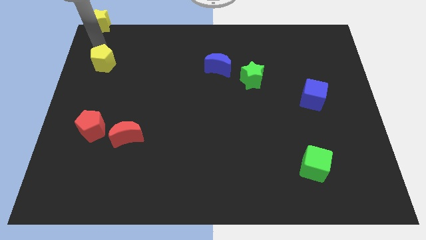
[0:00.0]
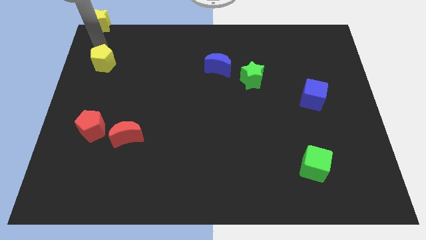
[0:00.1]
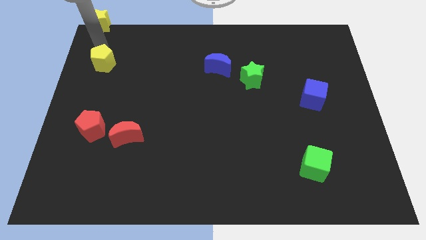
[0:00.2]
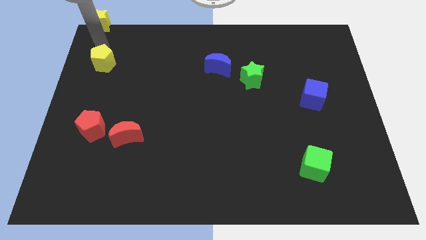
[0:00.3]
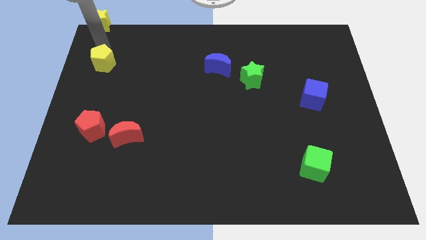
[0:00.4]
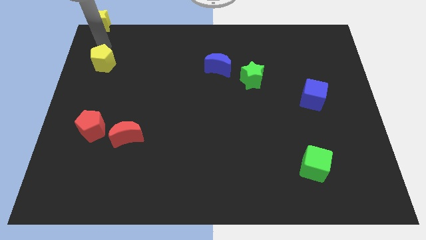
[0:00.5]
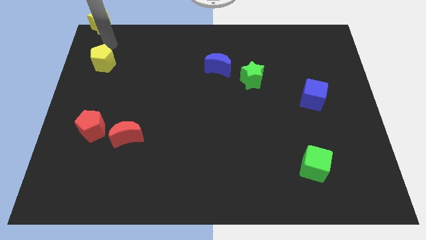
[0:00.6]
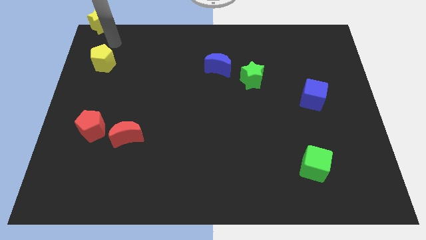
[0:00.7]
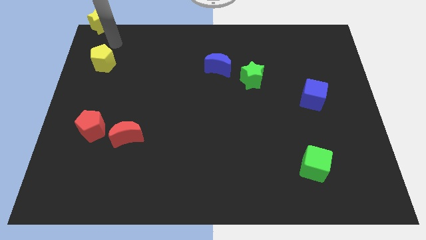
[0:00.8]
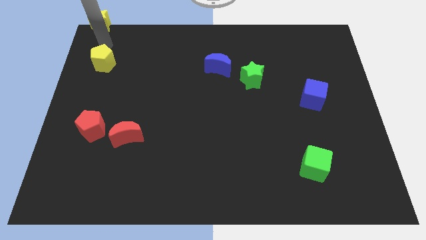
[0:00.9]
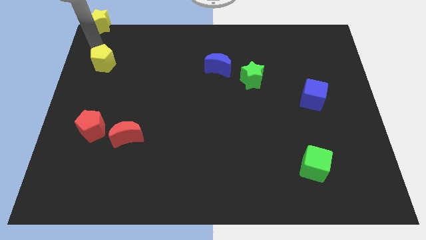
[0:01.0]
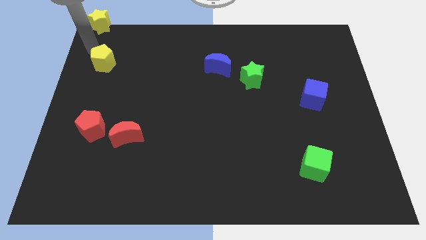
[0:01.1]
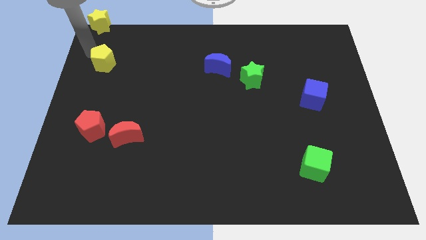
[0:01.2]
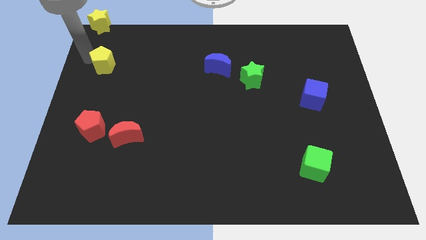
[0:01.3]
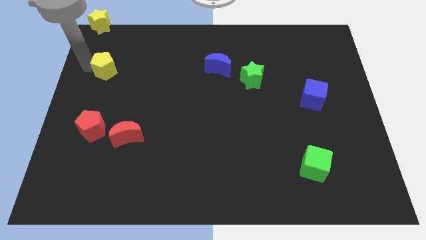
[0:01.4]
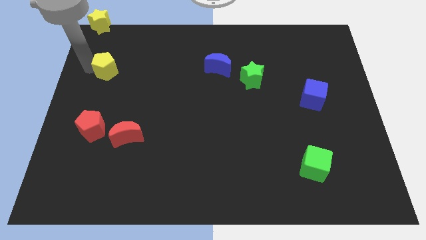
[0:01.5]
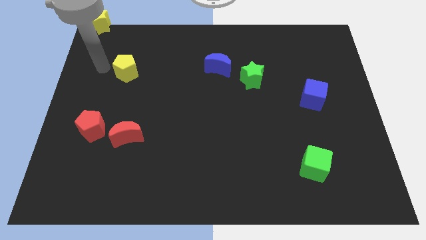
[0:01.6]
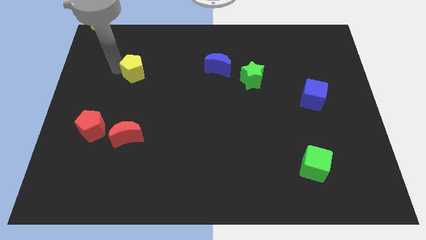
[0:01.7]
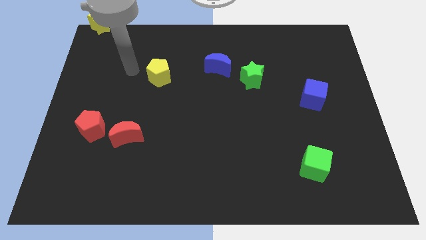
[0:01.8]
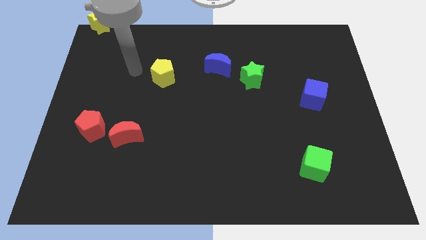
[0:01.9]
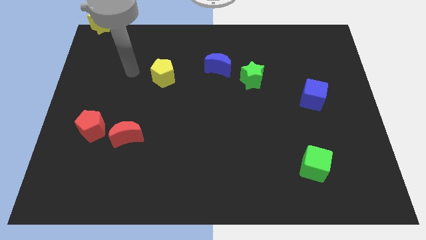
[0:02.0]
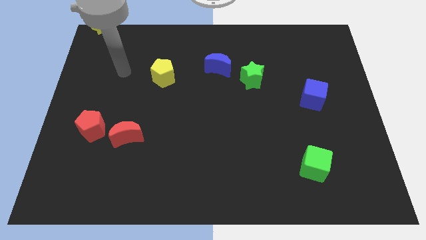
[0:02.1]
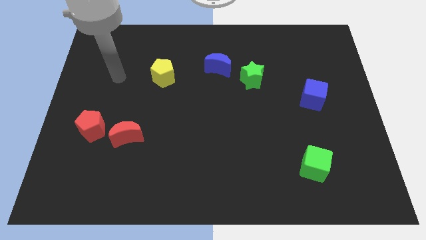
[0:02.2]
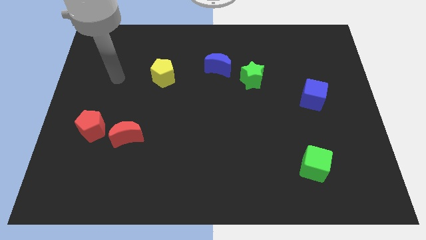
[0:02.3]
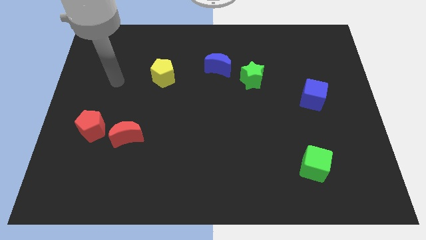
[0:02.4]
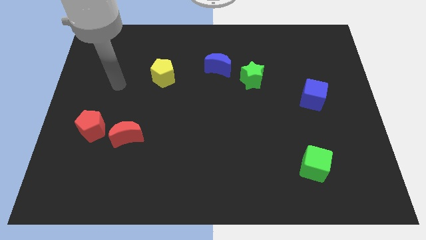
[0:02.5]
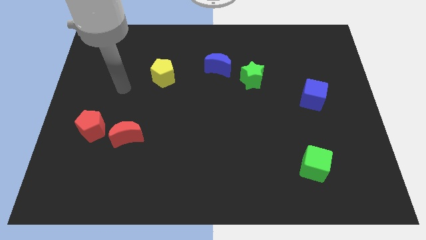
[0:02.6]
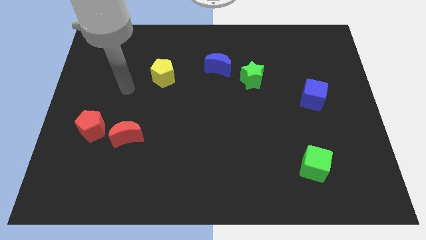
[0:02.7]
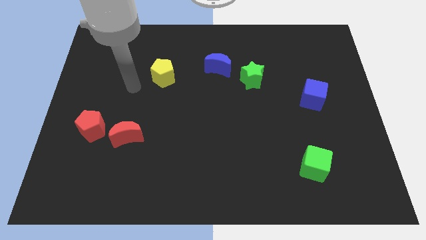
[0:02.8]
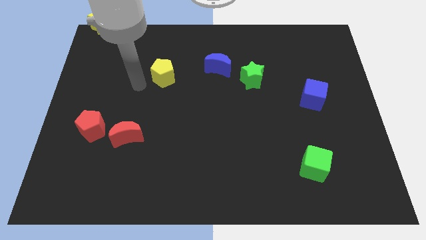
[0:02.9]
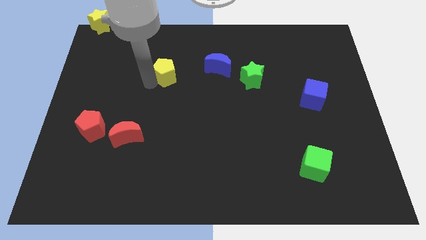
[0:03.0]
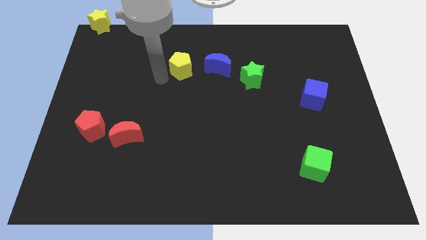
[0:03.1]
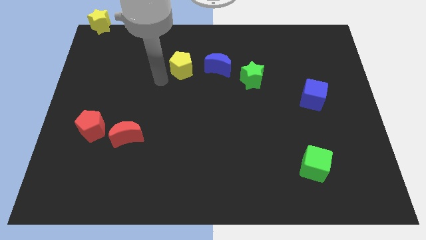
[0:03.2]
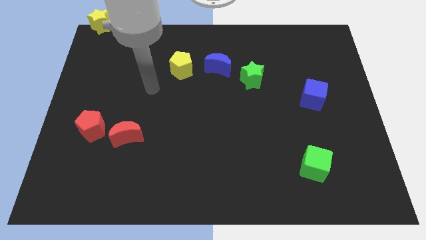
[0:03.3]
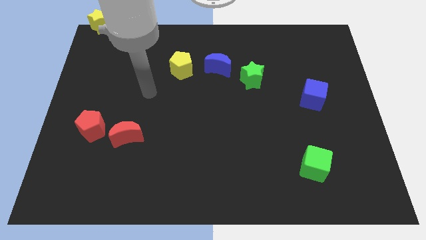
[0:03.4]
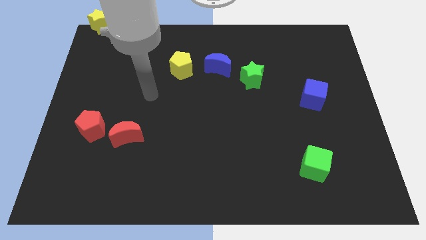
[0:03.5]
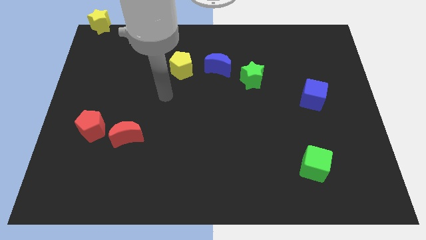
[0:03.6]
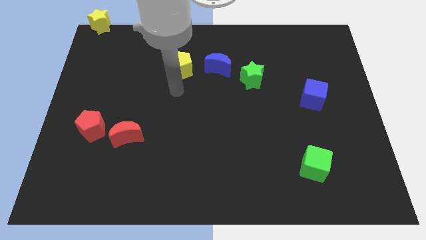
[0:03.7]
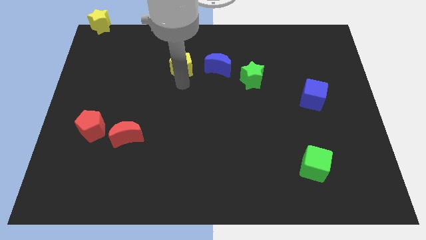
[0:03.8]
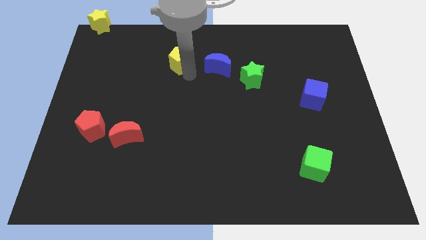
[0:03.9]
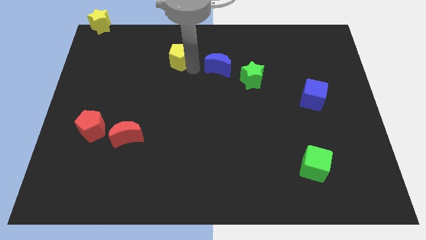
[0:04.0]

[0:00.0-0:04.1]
place yellow pentagon adjacent to blue moon

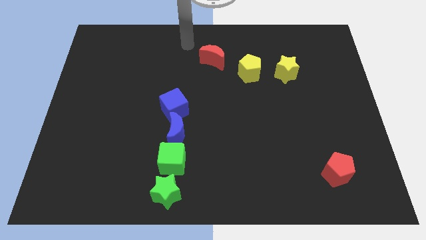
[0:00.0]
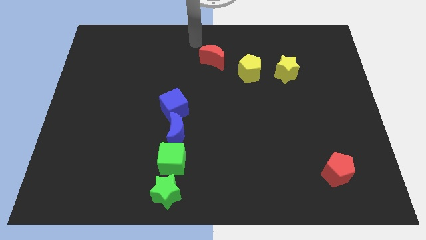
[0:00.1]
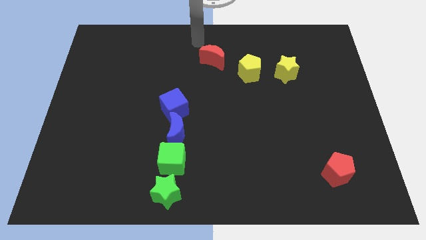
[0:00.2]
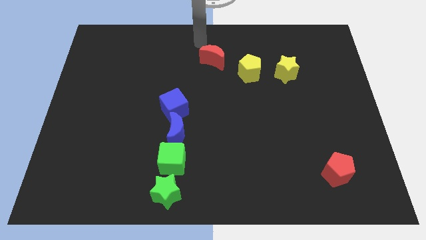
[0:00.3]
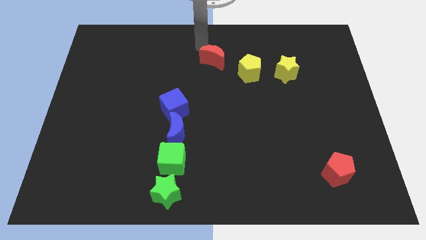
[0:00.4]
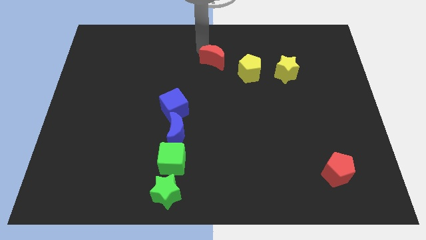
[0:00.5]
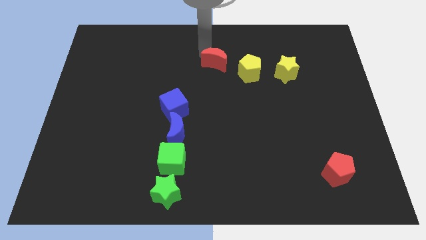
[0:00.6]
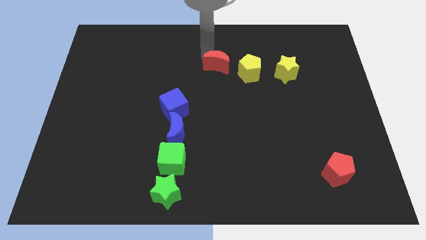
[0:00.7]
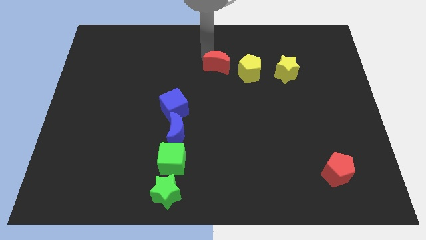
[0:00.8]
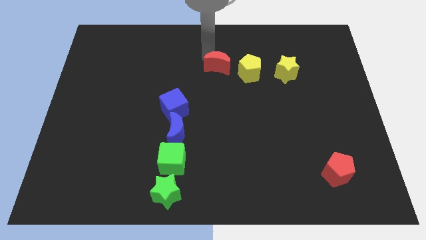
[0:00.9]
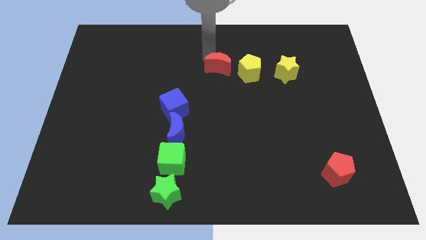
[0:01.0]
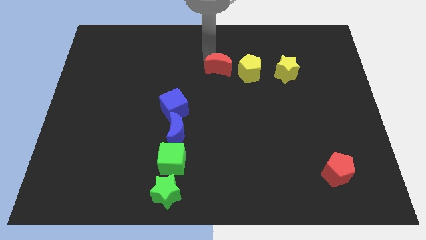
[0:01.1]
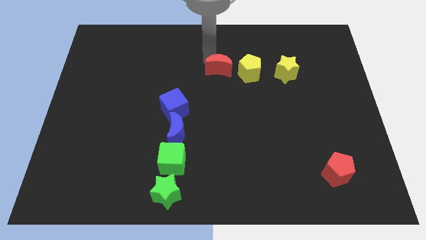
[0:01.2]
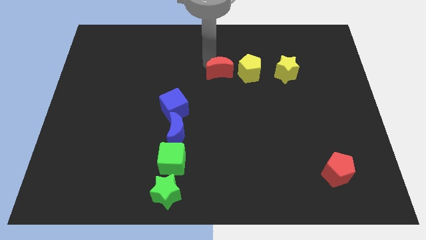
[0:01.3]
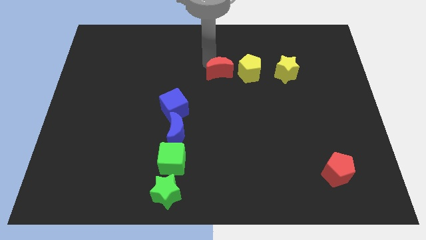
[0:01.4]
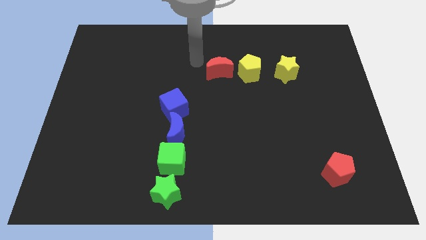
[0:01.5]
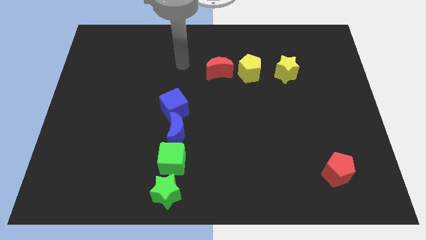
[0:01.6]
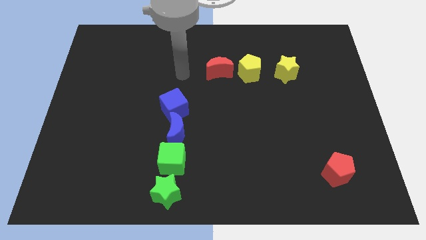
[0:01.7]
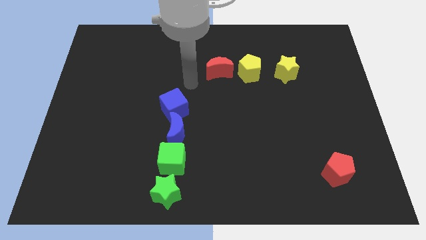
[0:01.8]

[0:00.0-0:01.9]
push the red crescent to the left of the yellow pentagon

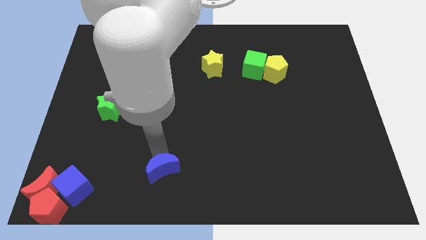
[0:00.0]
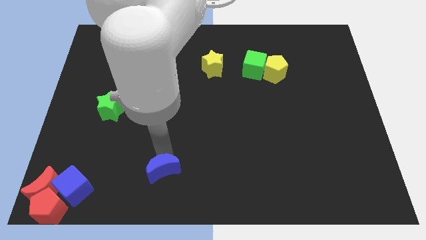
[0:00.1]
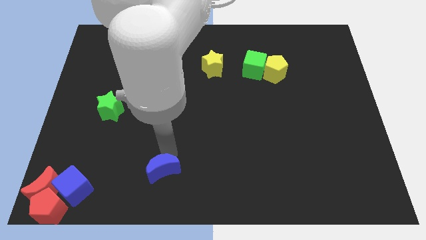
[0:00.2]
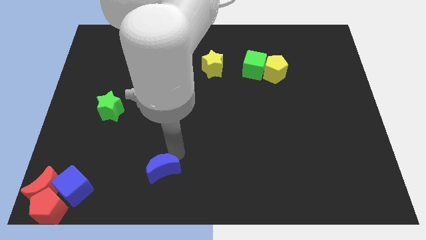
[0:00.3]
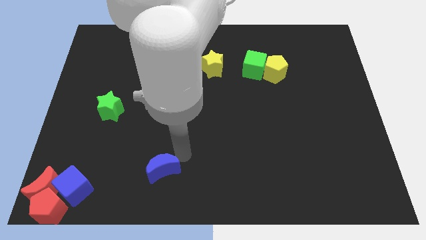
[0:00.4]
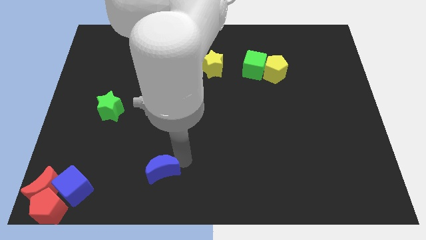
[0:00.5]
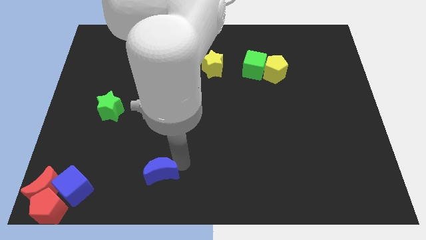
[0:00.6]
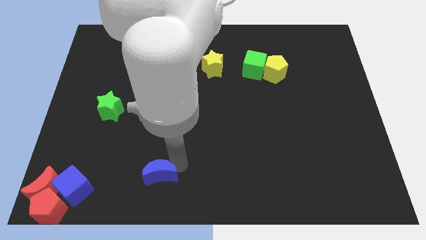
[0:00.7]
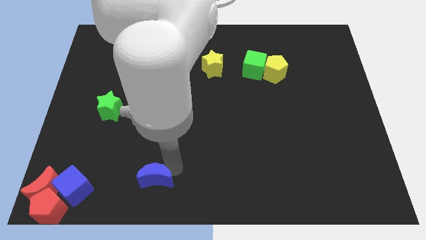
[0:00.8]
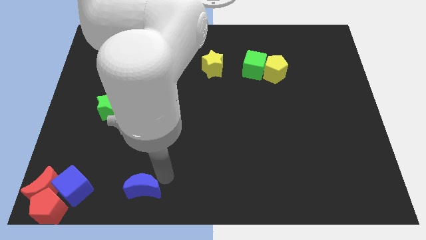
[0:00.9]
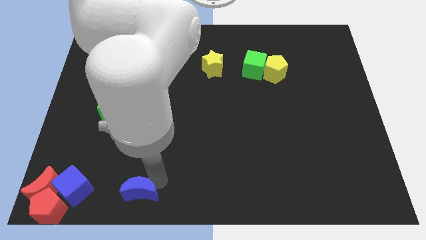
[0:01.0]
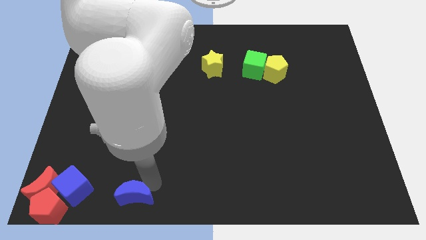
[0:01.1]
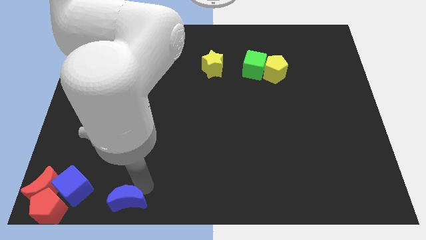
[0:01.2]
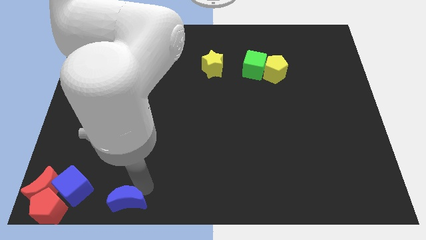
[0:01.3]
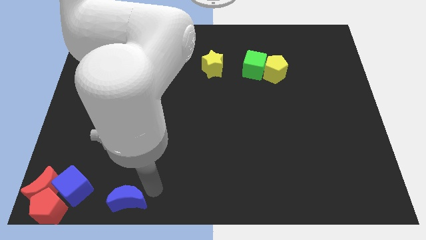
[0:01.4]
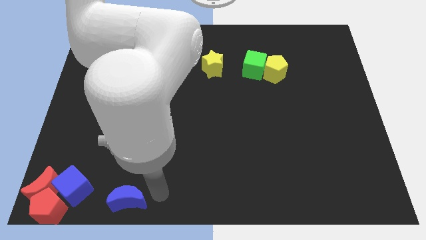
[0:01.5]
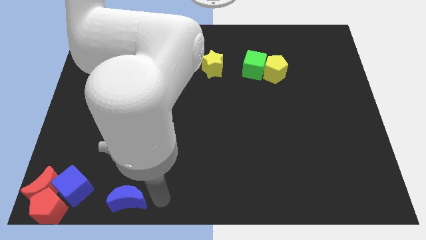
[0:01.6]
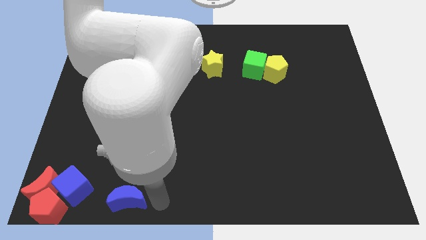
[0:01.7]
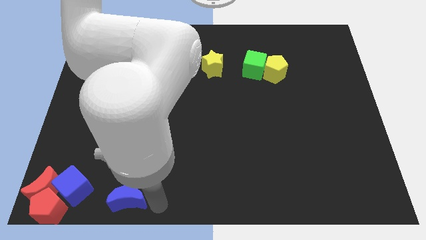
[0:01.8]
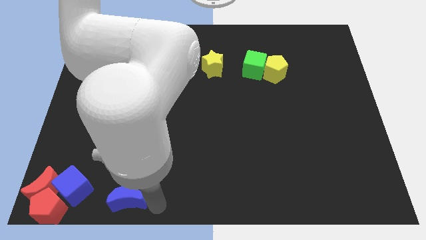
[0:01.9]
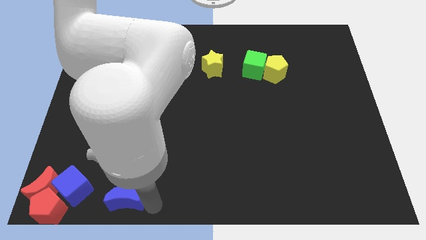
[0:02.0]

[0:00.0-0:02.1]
push the blue crescent to the right of the blue cube

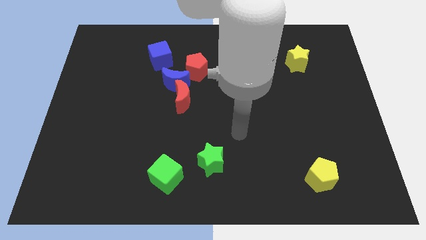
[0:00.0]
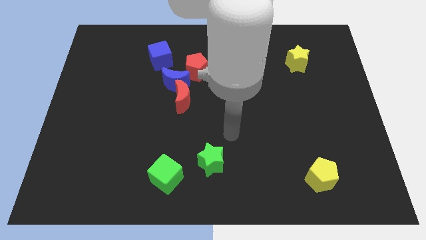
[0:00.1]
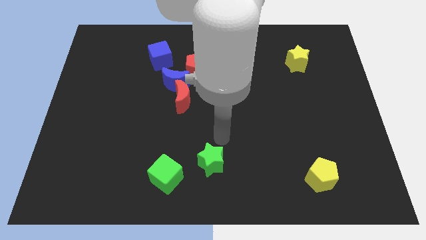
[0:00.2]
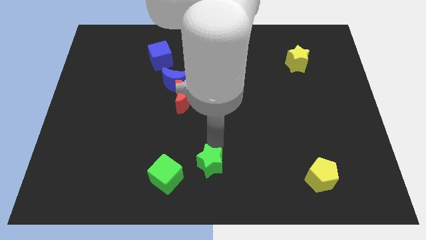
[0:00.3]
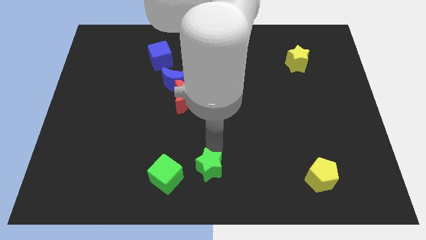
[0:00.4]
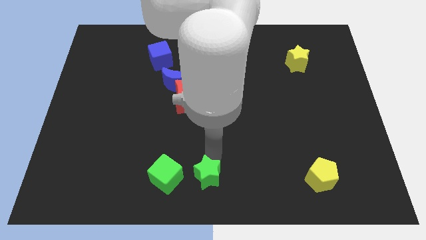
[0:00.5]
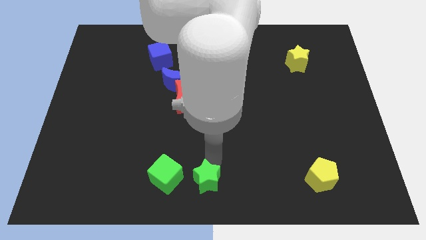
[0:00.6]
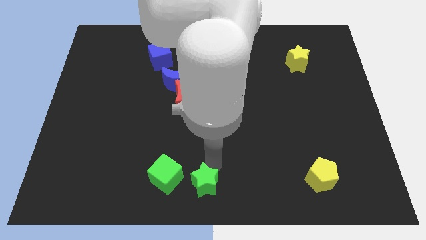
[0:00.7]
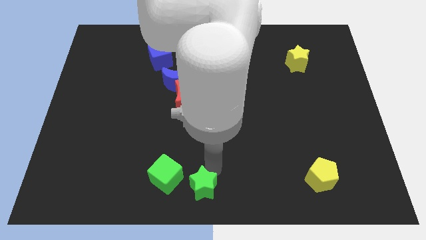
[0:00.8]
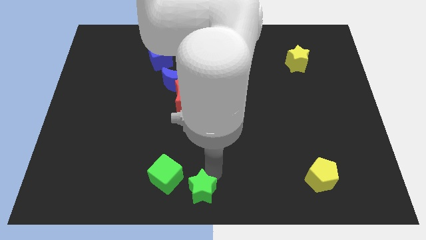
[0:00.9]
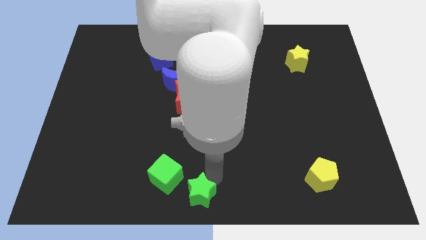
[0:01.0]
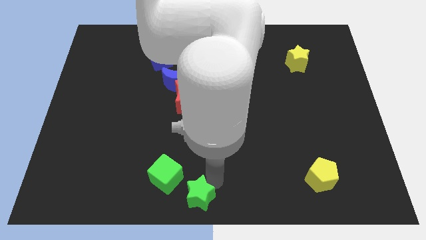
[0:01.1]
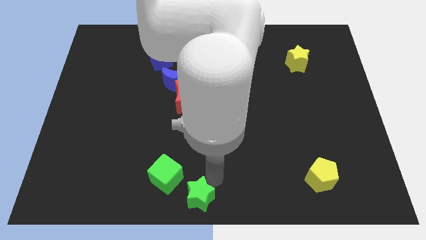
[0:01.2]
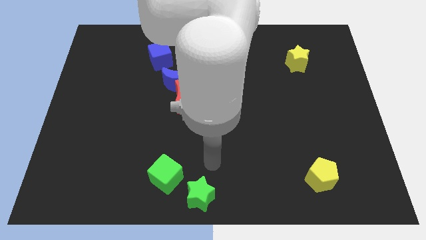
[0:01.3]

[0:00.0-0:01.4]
push the green star to bottom center
